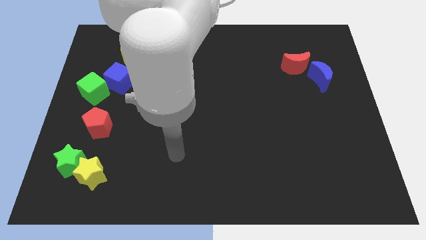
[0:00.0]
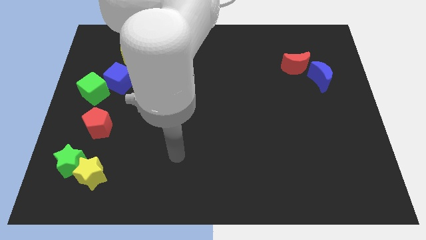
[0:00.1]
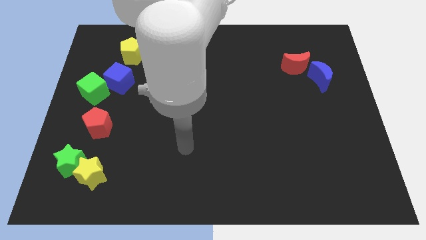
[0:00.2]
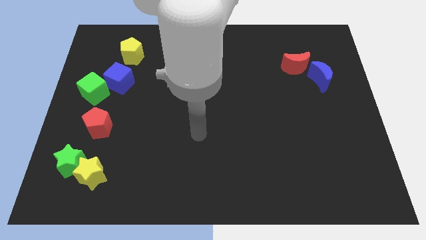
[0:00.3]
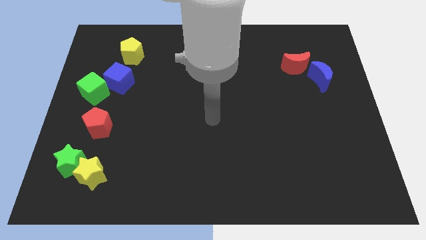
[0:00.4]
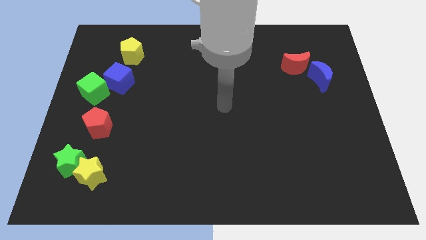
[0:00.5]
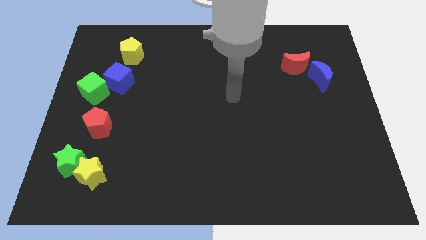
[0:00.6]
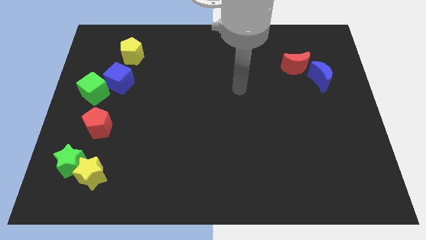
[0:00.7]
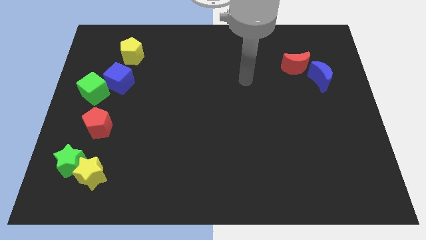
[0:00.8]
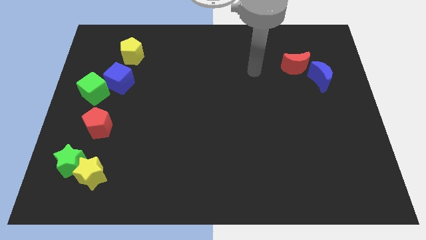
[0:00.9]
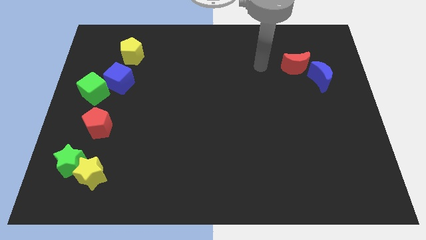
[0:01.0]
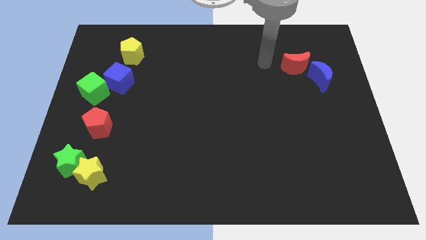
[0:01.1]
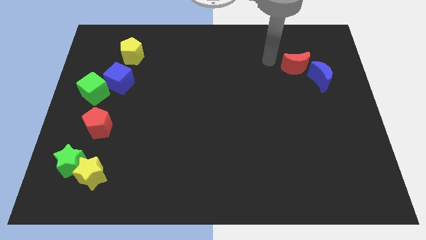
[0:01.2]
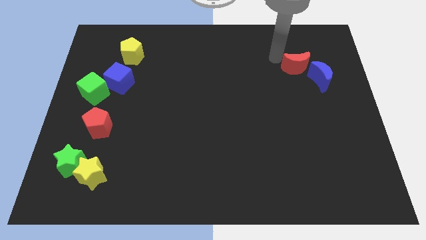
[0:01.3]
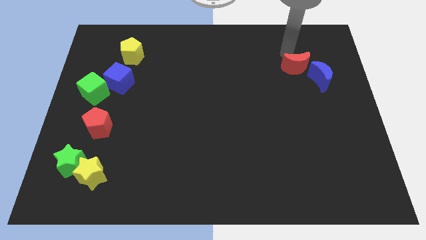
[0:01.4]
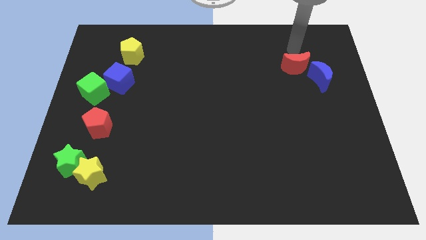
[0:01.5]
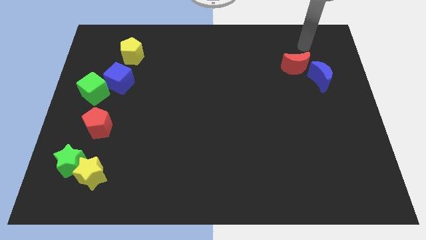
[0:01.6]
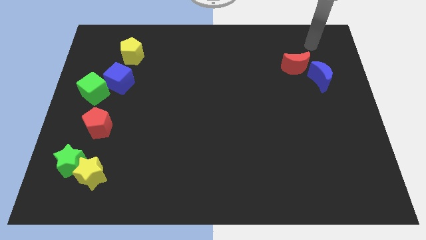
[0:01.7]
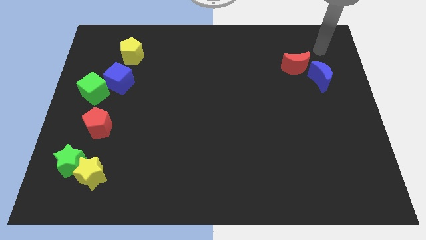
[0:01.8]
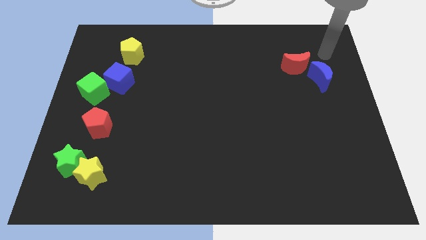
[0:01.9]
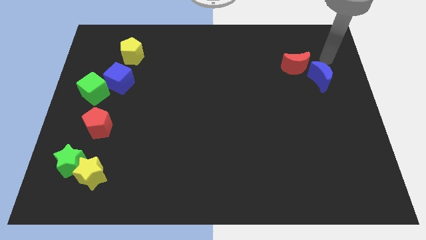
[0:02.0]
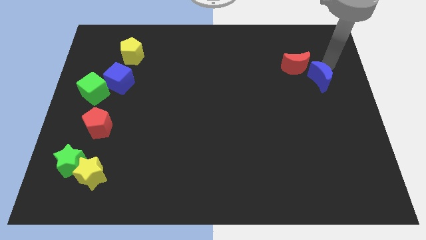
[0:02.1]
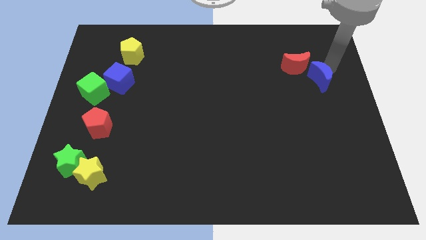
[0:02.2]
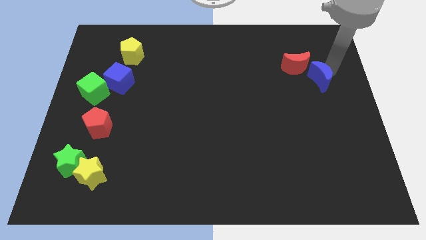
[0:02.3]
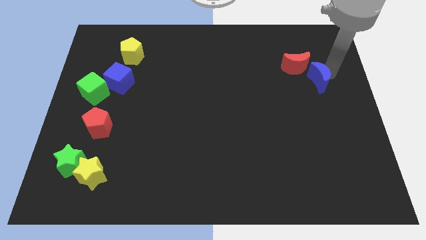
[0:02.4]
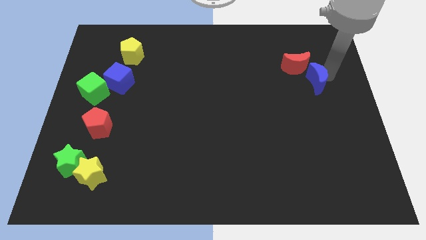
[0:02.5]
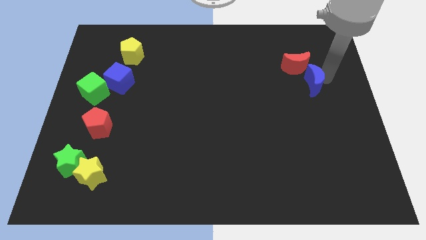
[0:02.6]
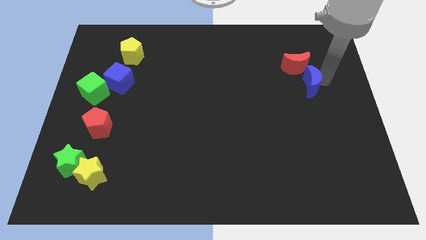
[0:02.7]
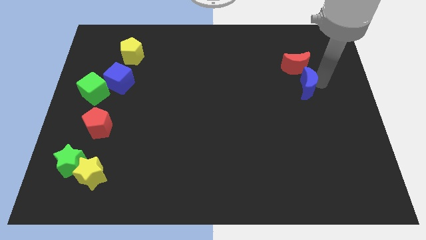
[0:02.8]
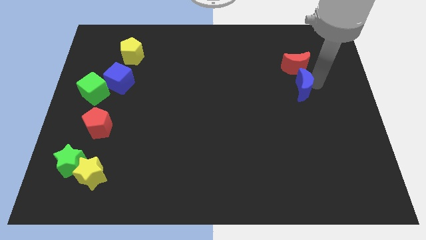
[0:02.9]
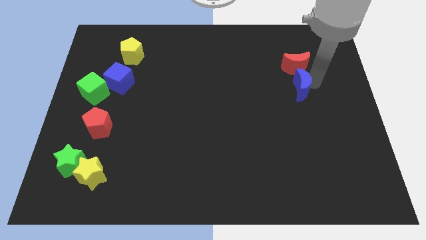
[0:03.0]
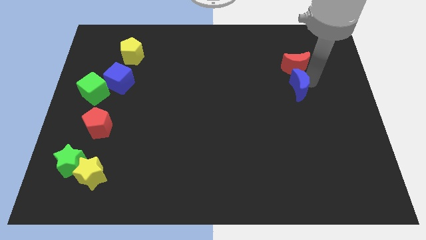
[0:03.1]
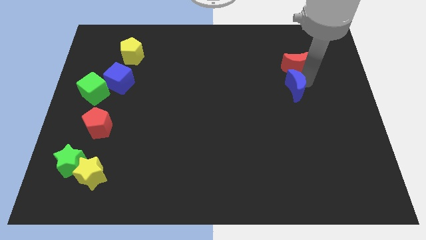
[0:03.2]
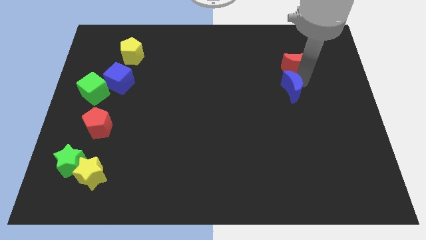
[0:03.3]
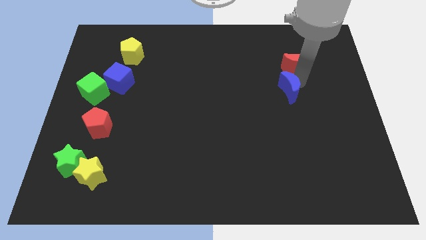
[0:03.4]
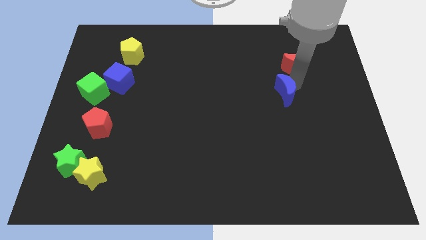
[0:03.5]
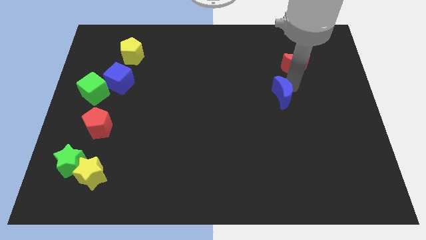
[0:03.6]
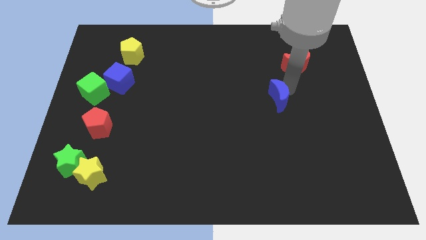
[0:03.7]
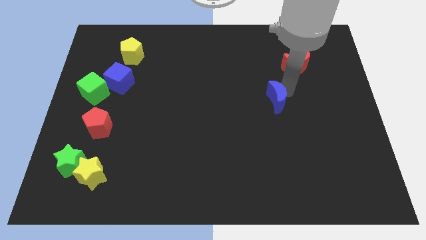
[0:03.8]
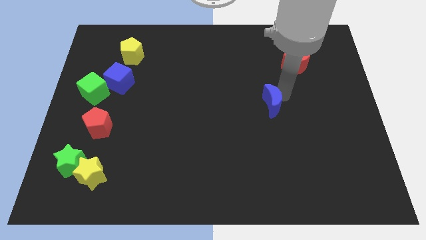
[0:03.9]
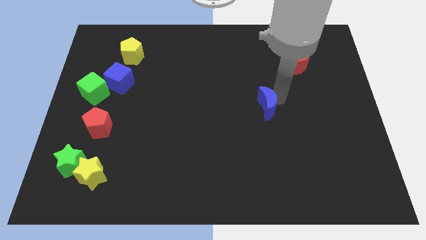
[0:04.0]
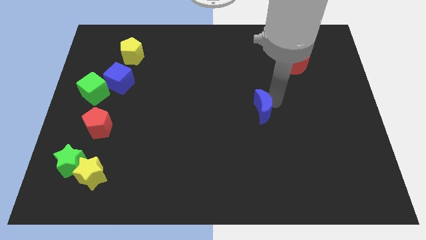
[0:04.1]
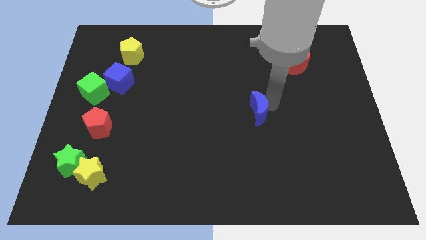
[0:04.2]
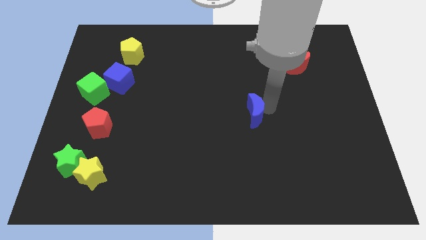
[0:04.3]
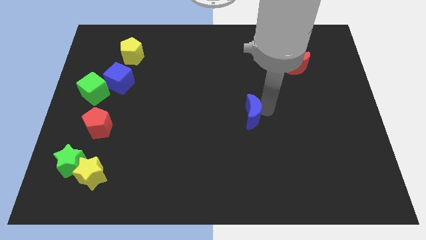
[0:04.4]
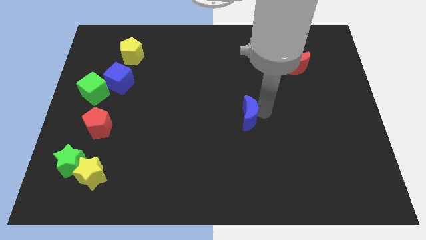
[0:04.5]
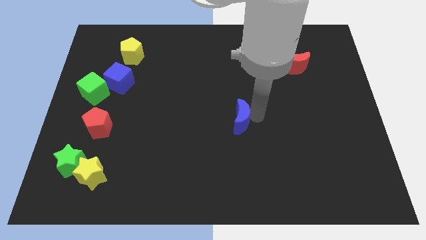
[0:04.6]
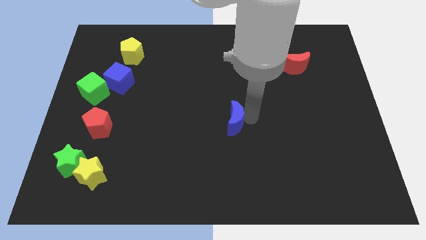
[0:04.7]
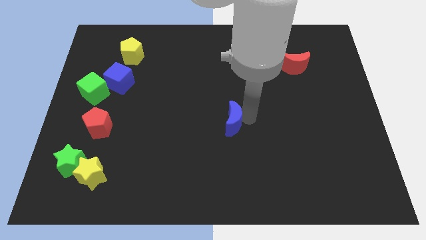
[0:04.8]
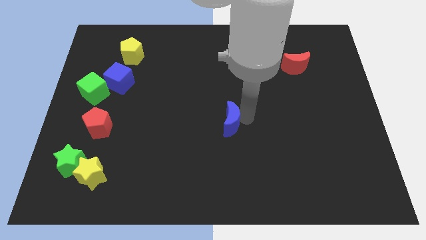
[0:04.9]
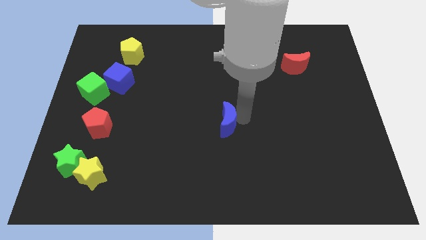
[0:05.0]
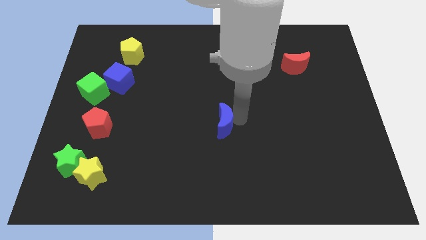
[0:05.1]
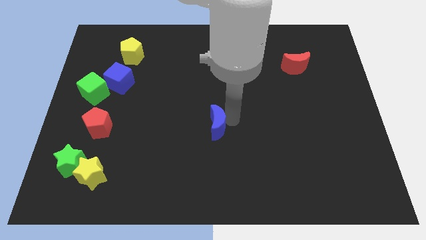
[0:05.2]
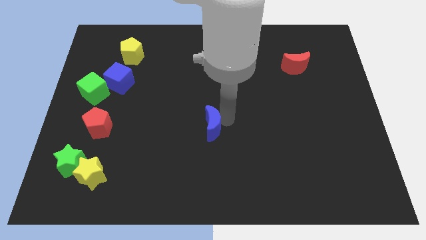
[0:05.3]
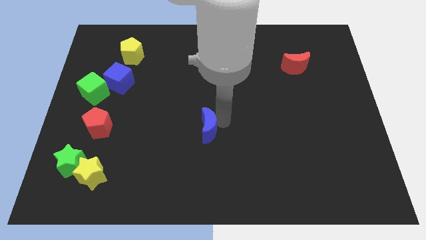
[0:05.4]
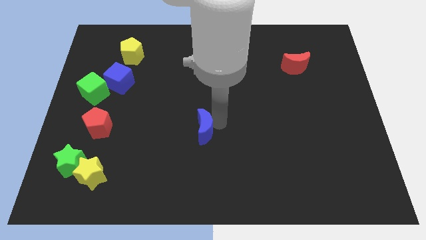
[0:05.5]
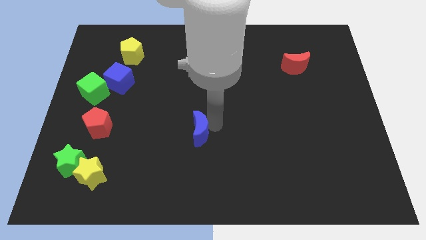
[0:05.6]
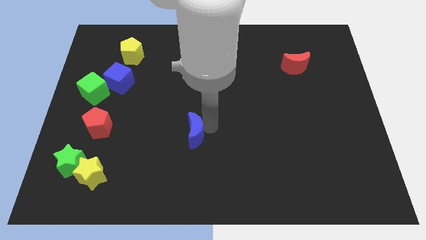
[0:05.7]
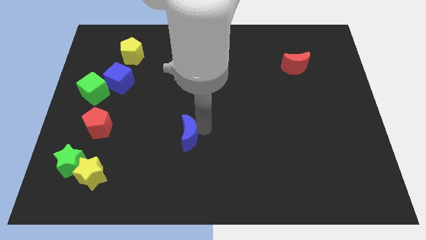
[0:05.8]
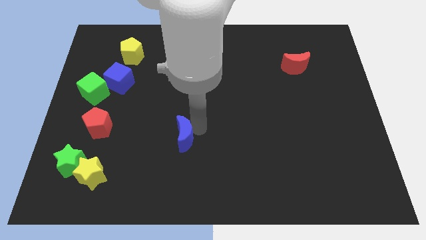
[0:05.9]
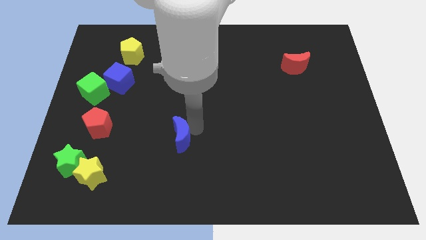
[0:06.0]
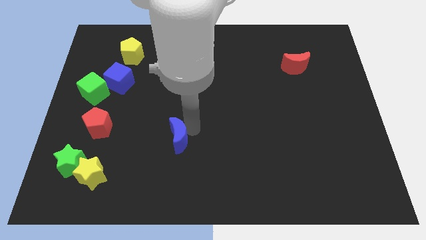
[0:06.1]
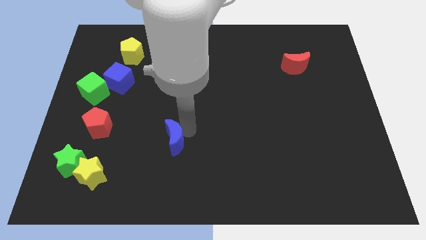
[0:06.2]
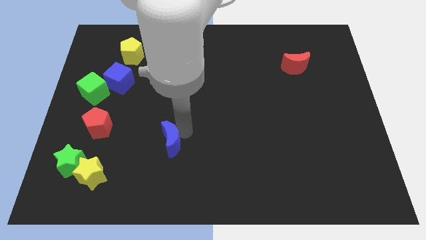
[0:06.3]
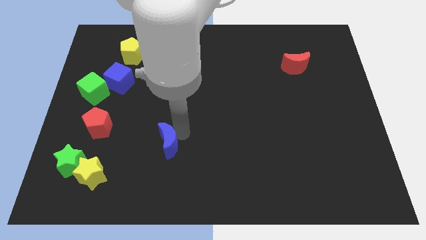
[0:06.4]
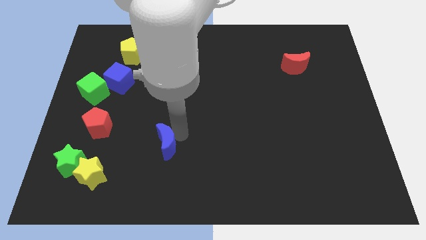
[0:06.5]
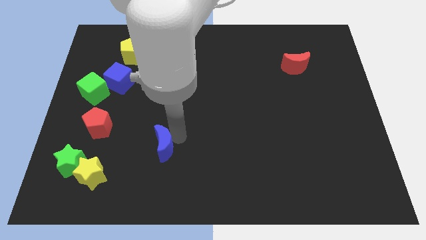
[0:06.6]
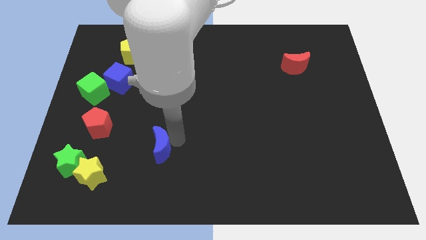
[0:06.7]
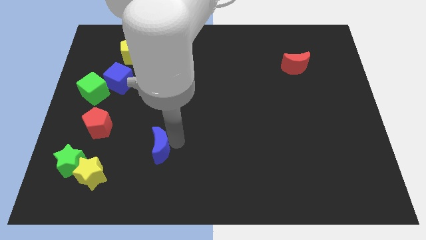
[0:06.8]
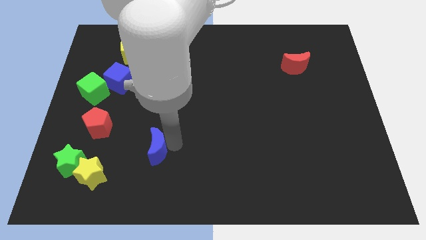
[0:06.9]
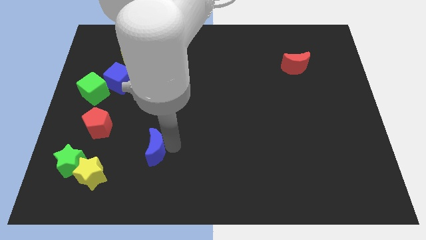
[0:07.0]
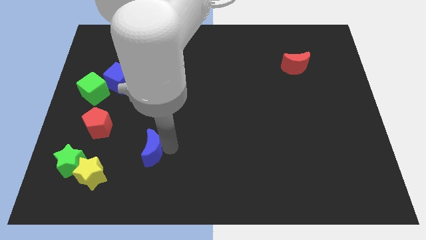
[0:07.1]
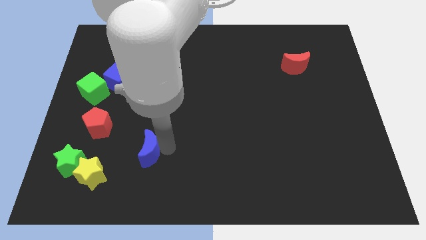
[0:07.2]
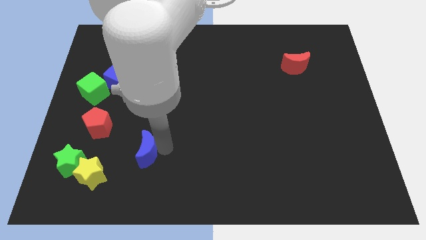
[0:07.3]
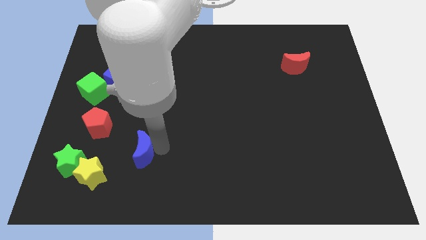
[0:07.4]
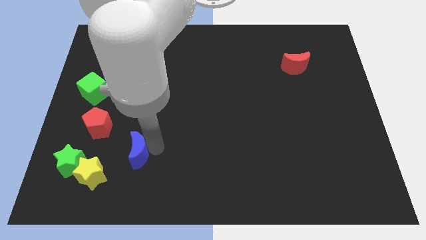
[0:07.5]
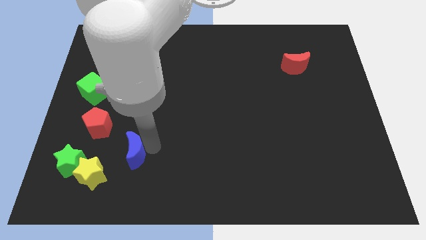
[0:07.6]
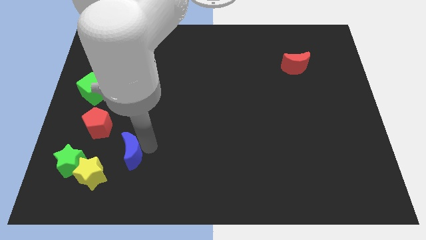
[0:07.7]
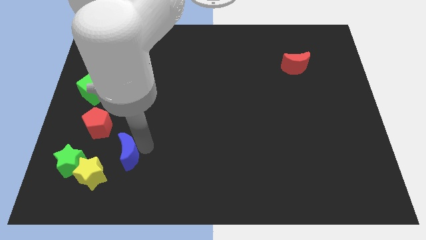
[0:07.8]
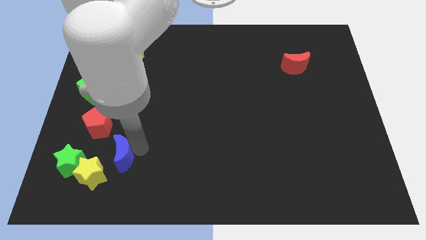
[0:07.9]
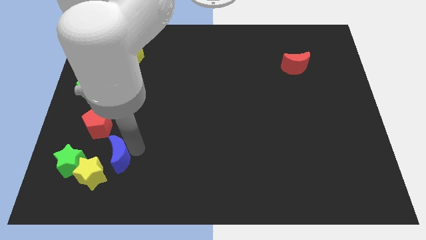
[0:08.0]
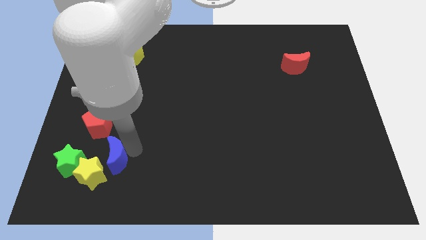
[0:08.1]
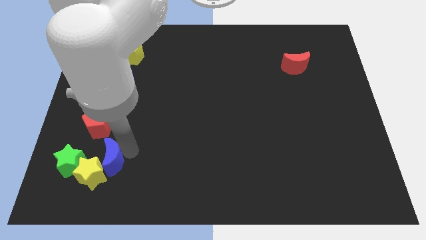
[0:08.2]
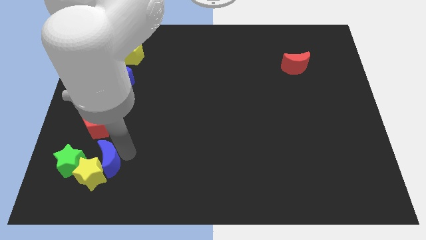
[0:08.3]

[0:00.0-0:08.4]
move the blue moon towards the yellow star

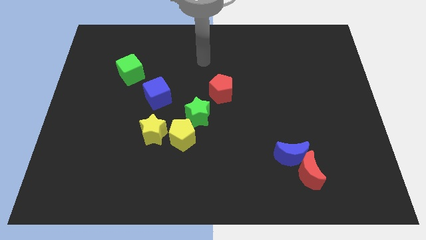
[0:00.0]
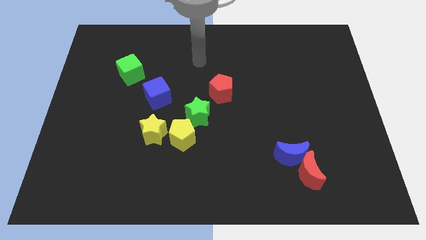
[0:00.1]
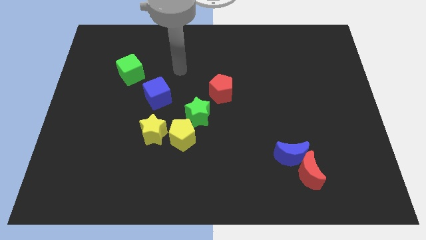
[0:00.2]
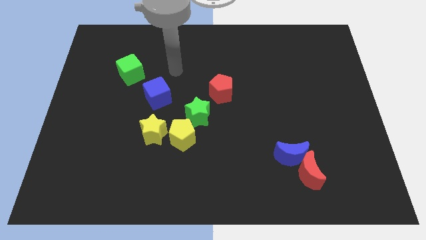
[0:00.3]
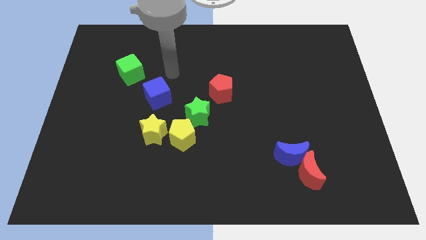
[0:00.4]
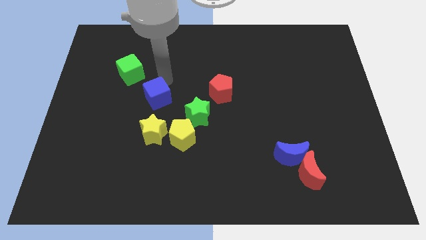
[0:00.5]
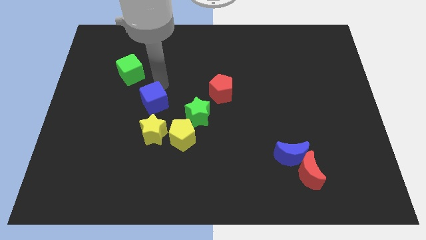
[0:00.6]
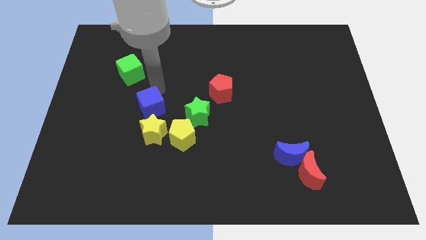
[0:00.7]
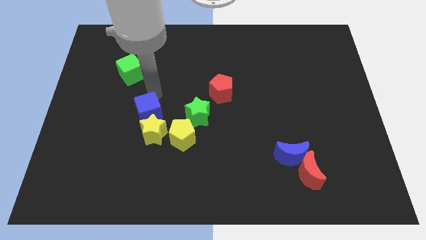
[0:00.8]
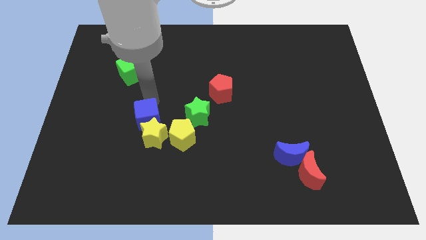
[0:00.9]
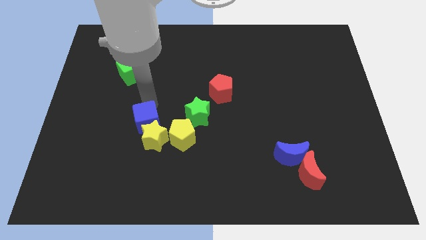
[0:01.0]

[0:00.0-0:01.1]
put the blue cube to the yellow star
